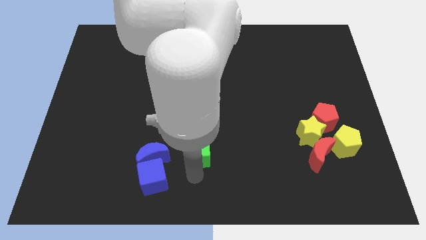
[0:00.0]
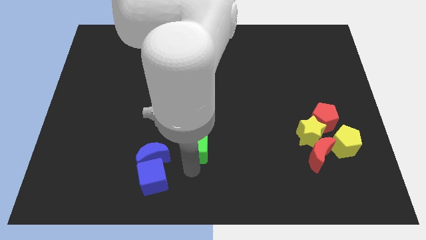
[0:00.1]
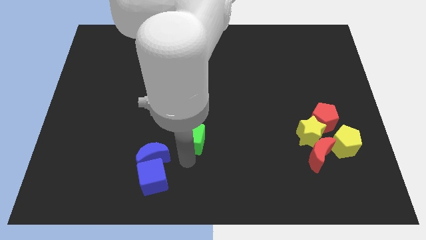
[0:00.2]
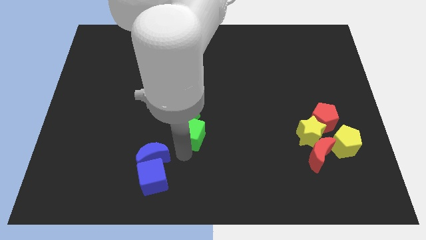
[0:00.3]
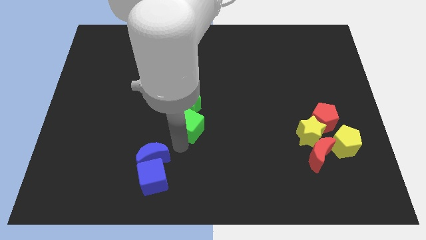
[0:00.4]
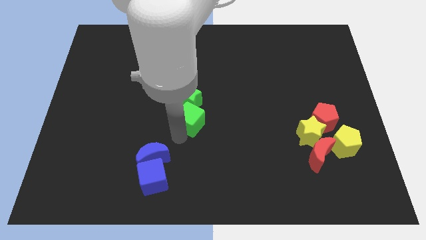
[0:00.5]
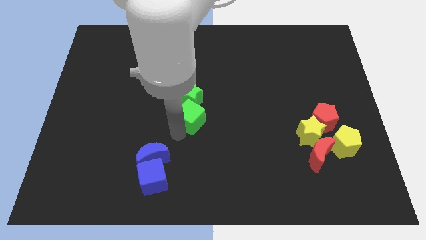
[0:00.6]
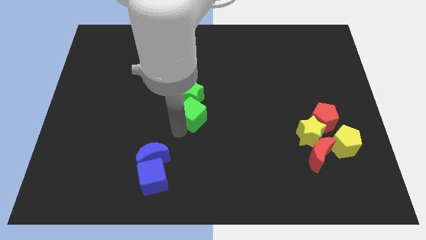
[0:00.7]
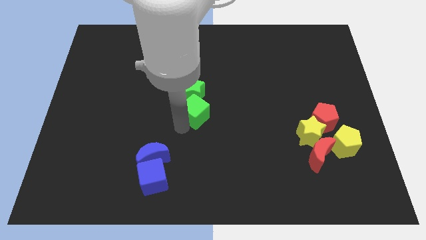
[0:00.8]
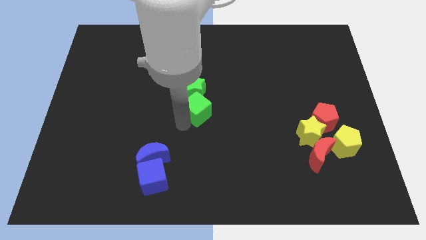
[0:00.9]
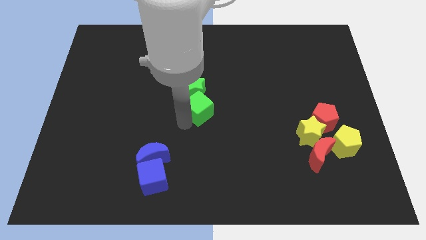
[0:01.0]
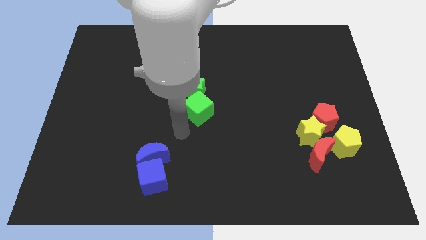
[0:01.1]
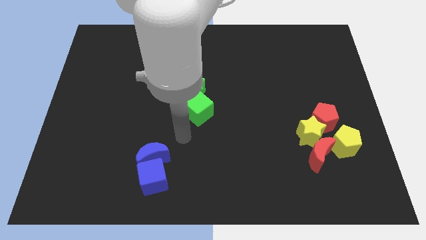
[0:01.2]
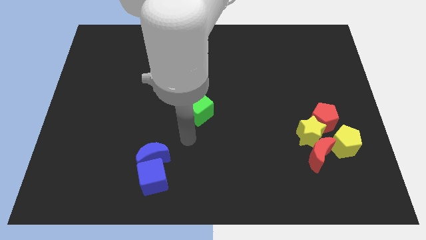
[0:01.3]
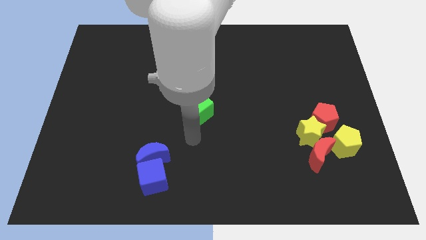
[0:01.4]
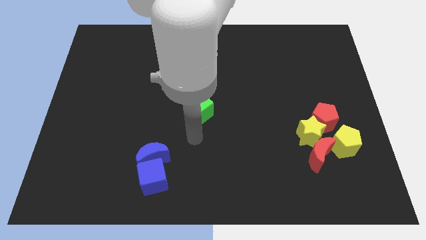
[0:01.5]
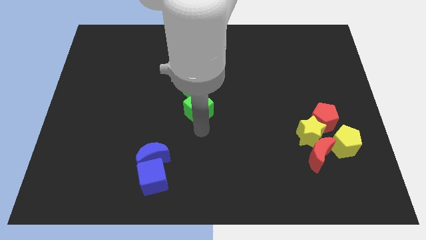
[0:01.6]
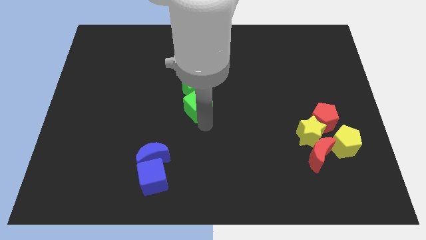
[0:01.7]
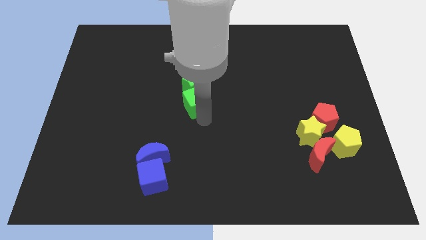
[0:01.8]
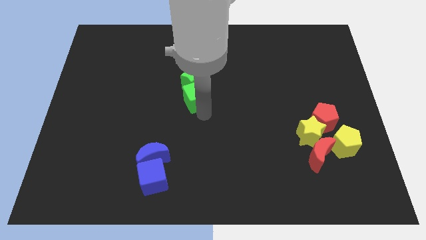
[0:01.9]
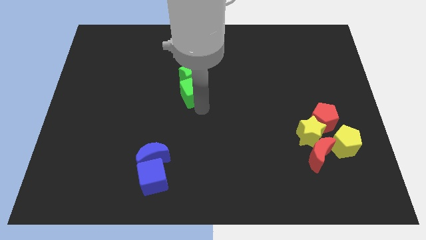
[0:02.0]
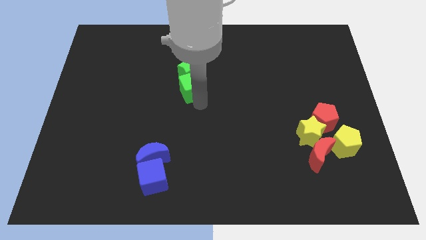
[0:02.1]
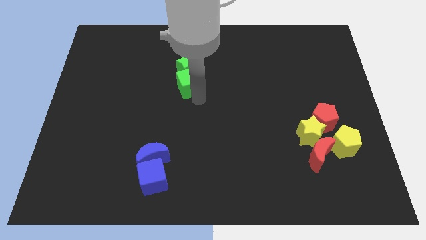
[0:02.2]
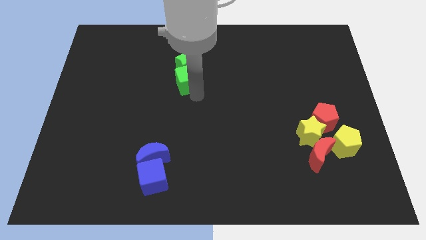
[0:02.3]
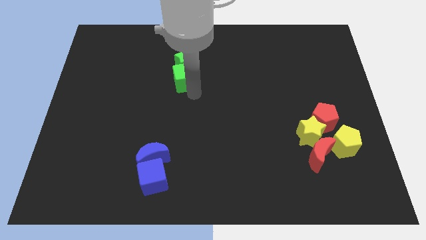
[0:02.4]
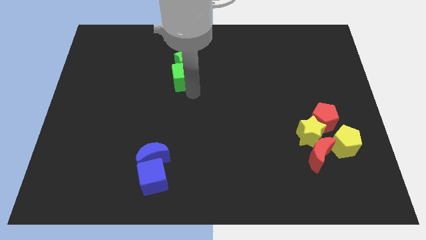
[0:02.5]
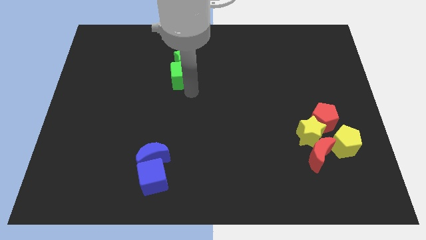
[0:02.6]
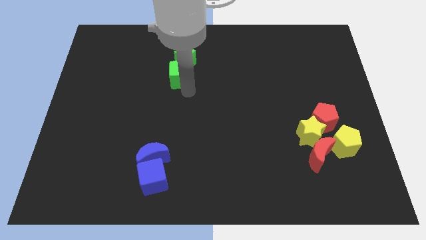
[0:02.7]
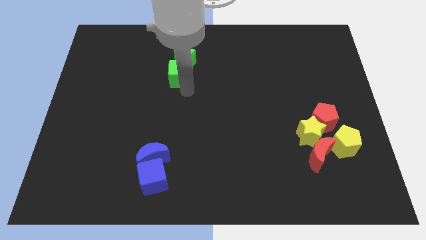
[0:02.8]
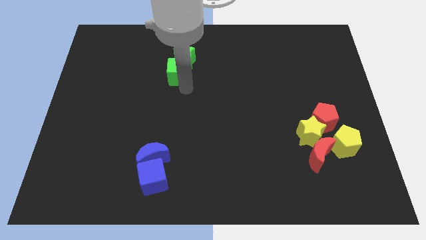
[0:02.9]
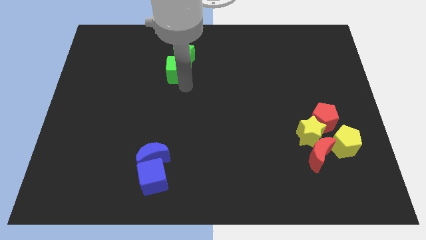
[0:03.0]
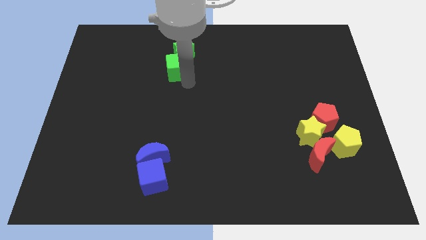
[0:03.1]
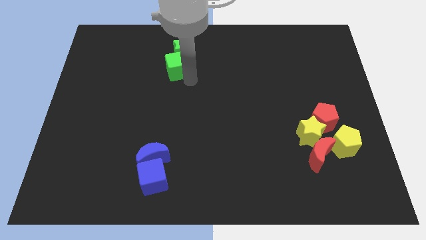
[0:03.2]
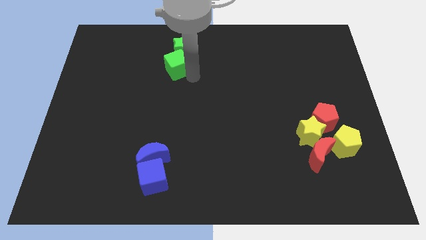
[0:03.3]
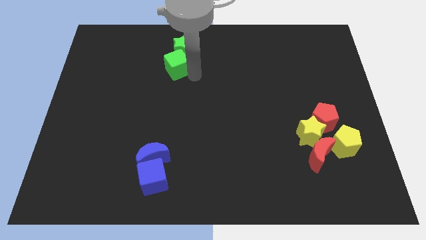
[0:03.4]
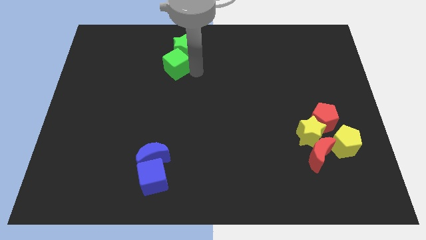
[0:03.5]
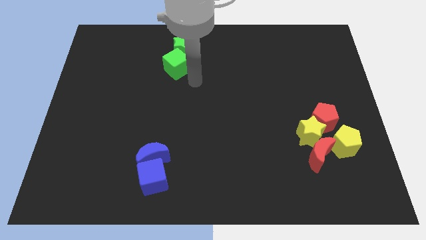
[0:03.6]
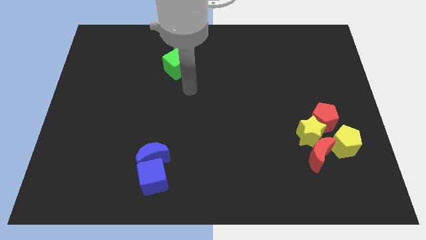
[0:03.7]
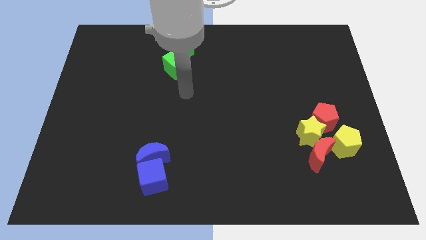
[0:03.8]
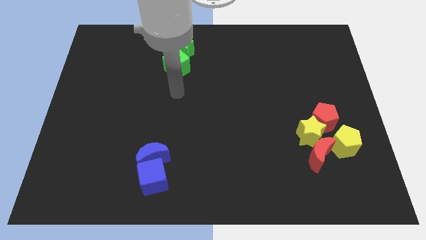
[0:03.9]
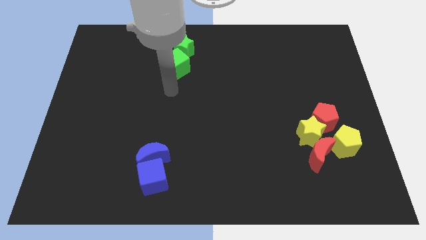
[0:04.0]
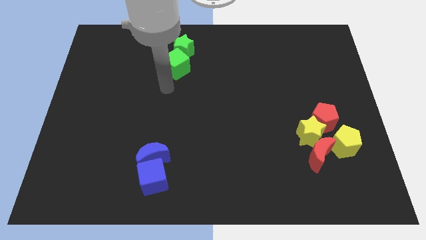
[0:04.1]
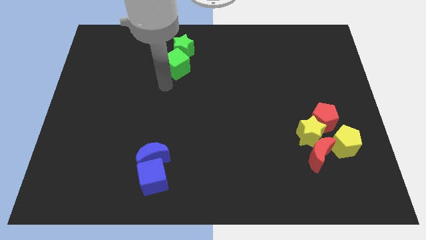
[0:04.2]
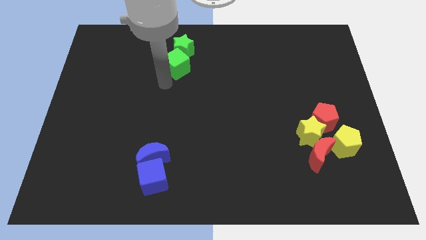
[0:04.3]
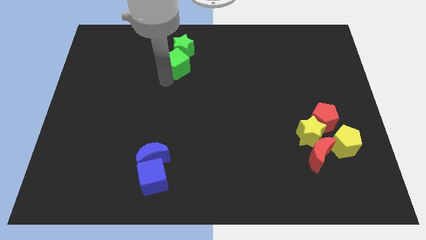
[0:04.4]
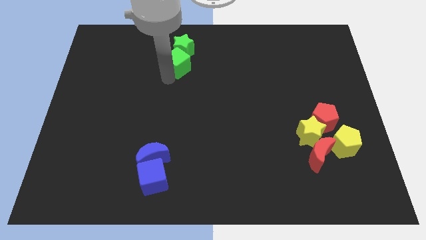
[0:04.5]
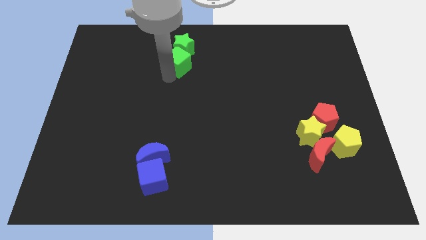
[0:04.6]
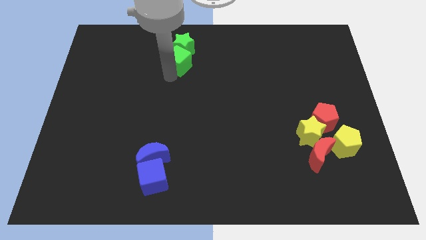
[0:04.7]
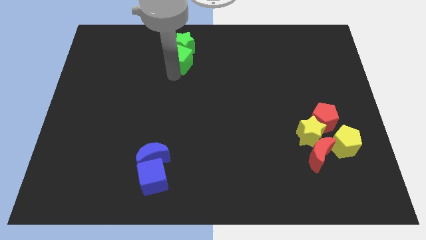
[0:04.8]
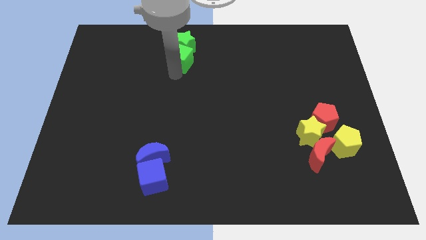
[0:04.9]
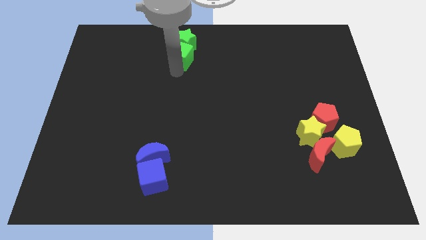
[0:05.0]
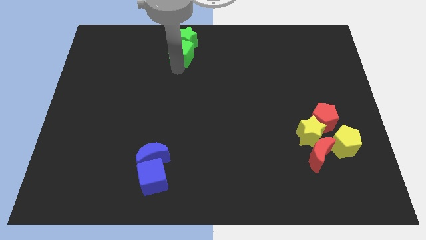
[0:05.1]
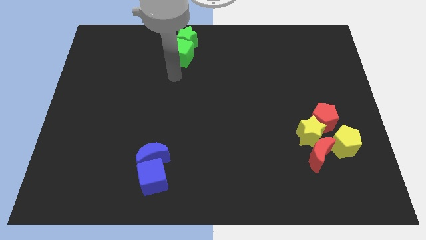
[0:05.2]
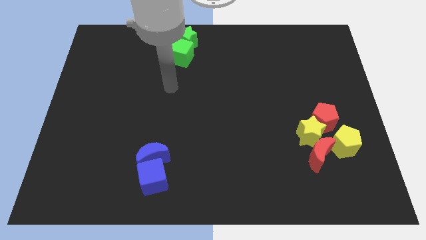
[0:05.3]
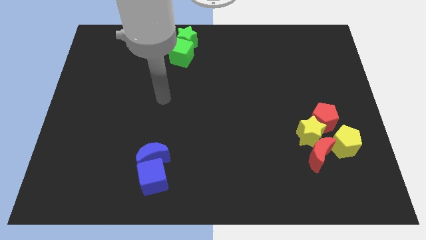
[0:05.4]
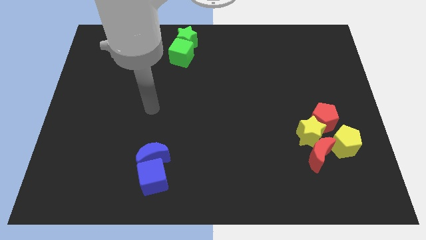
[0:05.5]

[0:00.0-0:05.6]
push green blocks into the top middle of the board

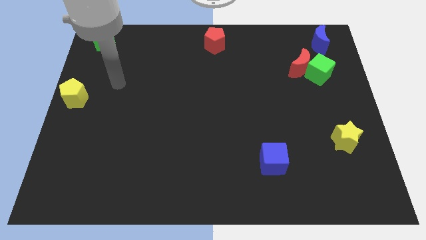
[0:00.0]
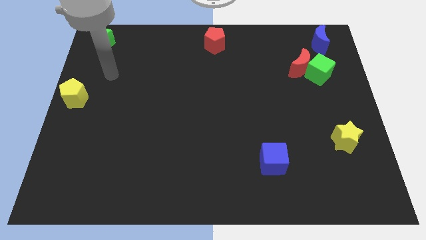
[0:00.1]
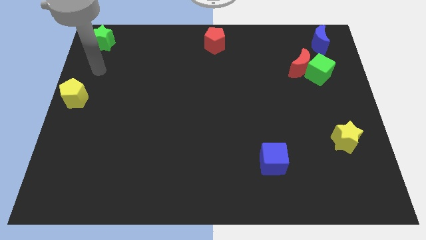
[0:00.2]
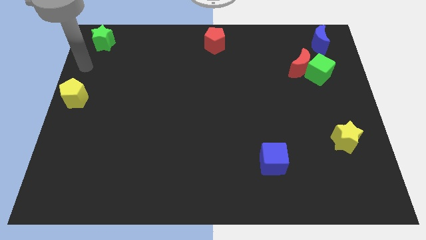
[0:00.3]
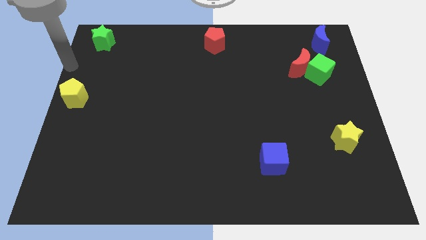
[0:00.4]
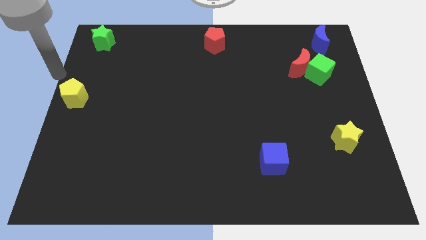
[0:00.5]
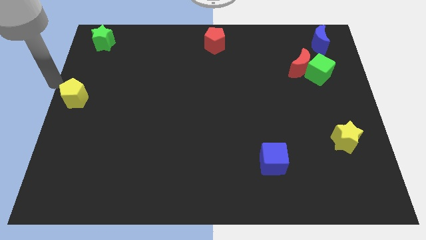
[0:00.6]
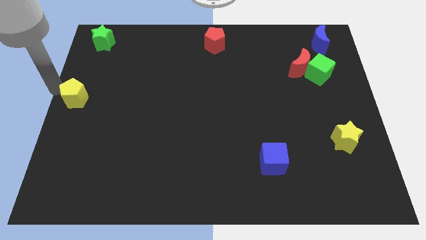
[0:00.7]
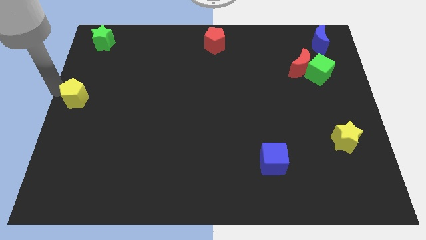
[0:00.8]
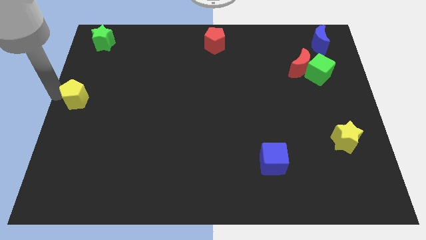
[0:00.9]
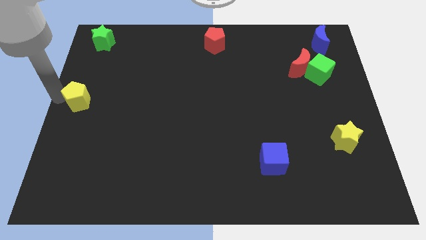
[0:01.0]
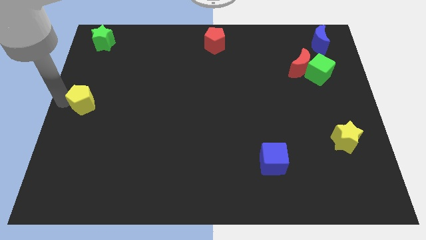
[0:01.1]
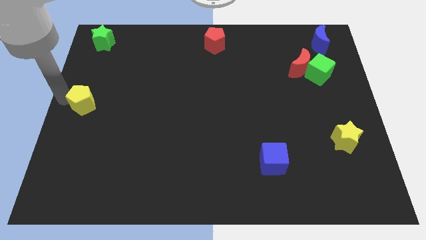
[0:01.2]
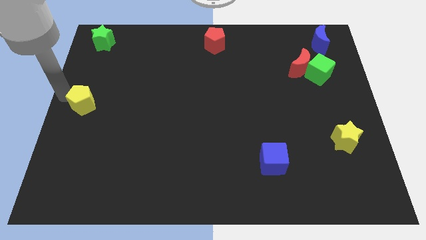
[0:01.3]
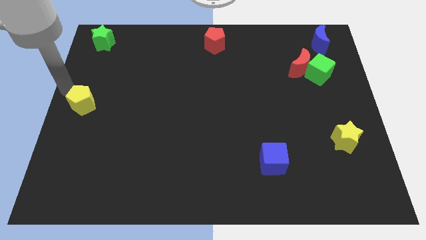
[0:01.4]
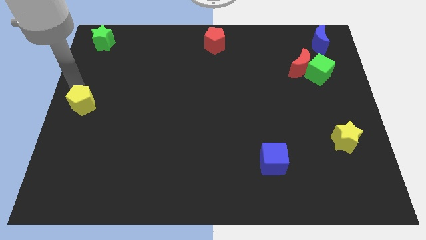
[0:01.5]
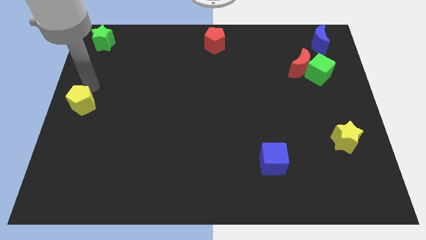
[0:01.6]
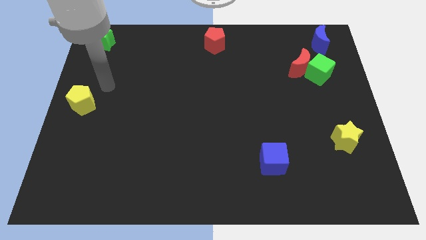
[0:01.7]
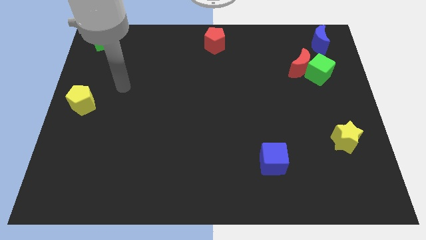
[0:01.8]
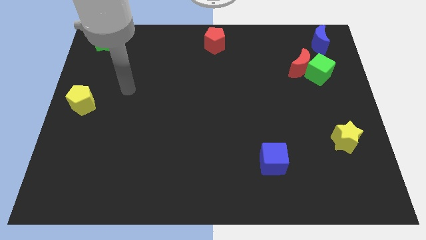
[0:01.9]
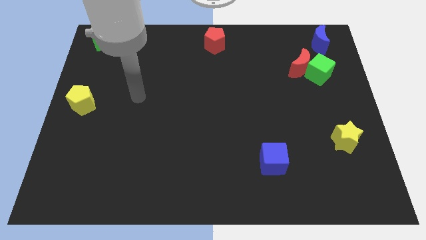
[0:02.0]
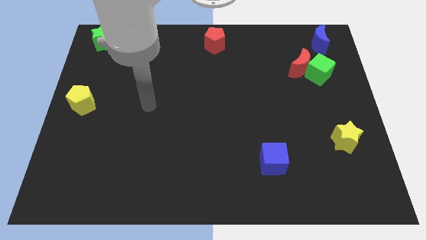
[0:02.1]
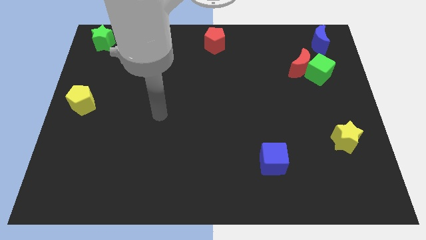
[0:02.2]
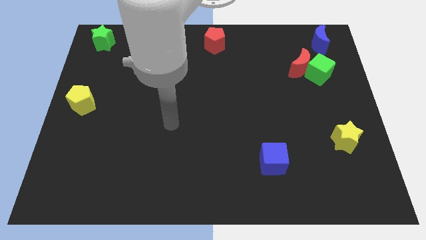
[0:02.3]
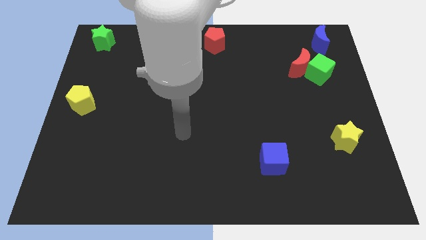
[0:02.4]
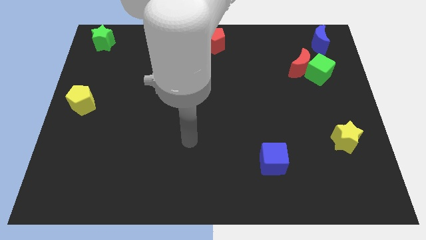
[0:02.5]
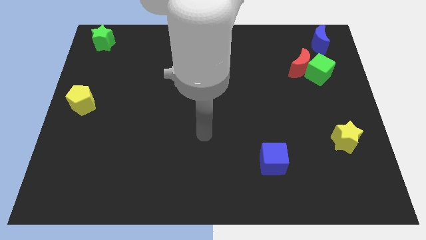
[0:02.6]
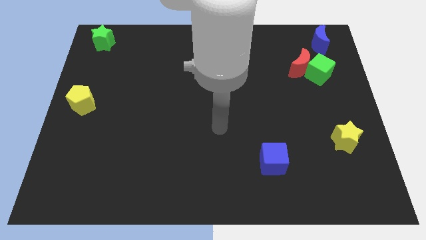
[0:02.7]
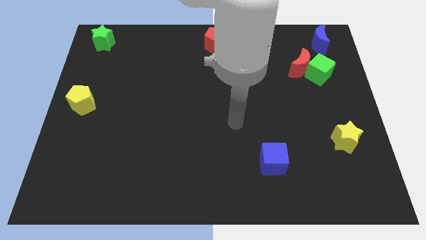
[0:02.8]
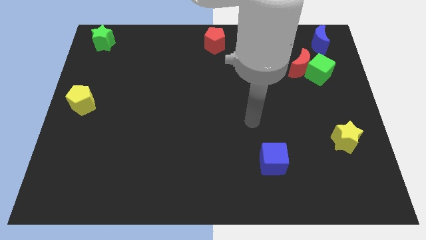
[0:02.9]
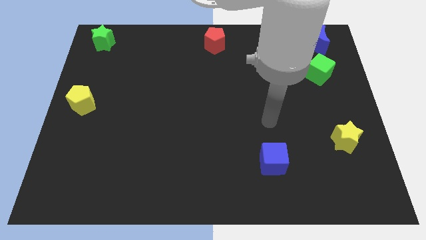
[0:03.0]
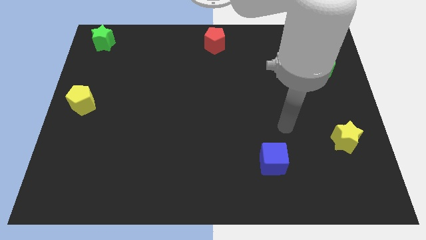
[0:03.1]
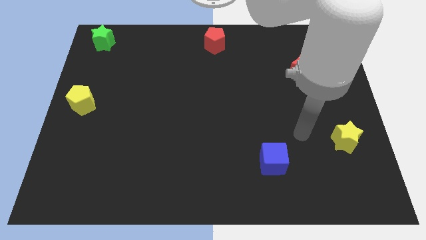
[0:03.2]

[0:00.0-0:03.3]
put the yellow pentagon vertically at the bottom side of the green star
